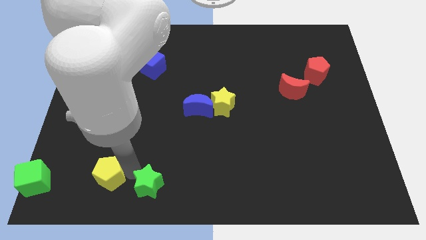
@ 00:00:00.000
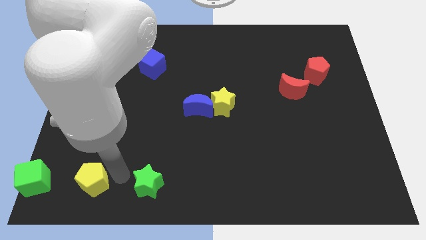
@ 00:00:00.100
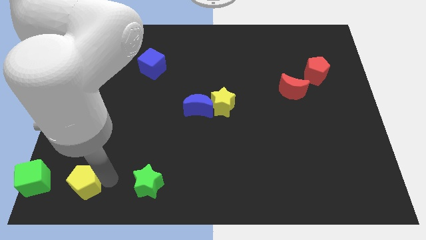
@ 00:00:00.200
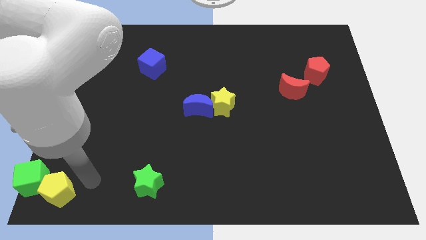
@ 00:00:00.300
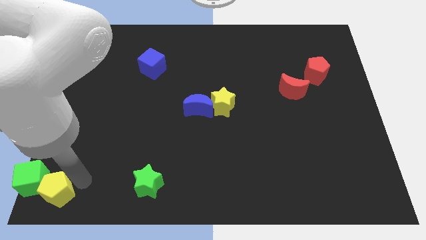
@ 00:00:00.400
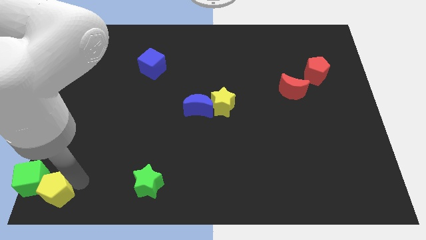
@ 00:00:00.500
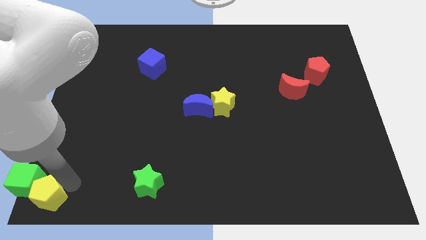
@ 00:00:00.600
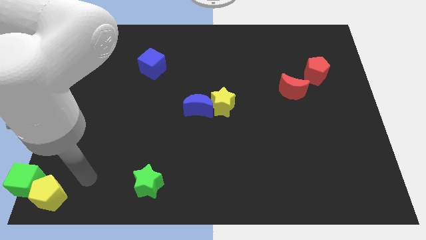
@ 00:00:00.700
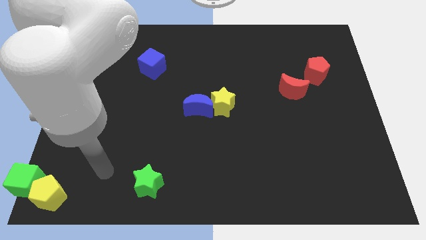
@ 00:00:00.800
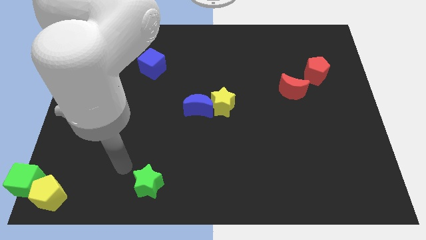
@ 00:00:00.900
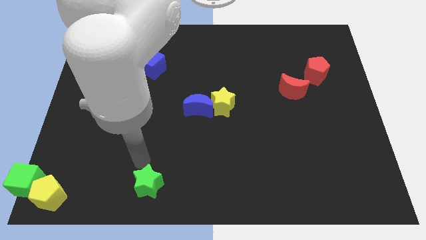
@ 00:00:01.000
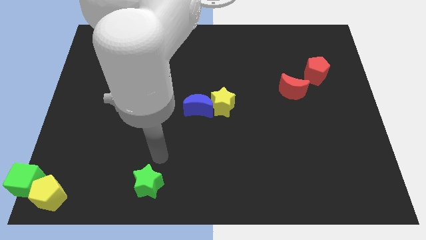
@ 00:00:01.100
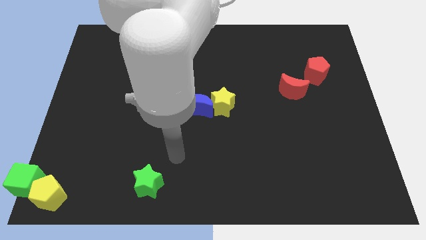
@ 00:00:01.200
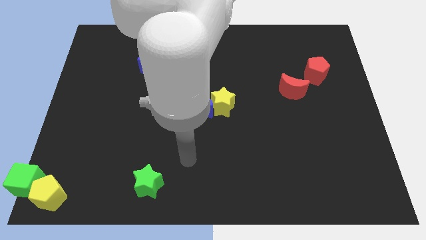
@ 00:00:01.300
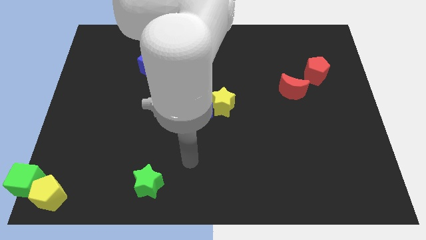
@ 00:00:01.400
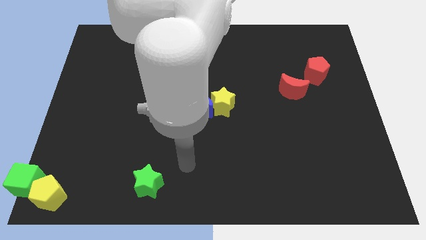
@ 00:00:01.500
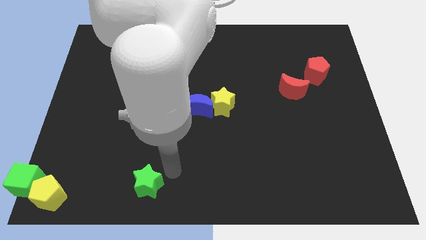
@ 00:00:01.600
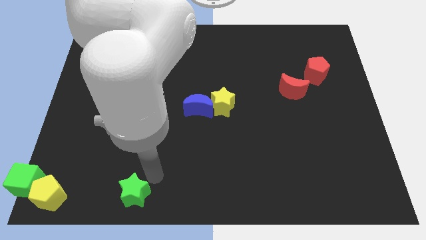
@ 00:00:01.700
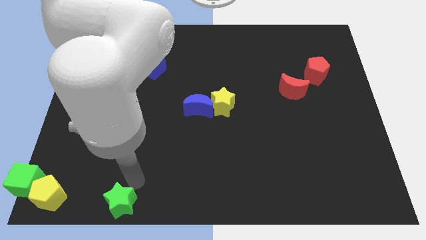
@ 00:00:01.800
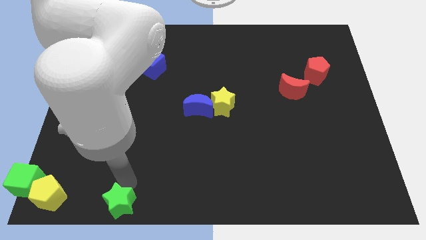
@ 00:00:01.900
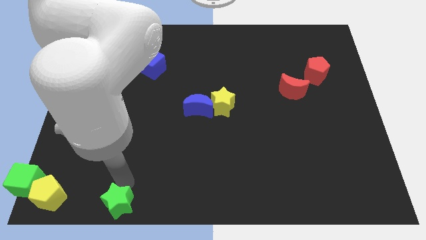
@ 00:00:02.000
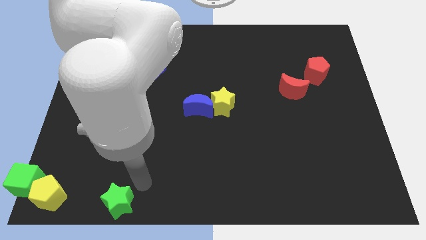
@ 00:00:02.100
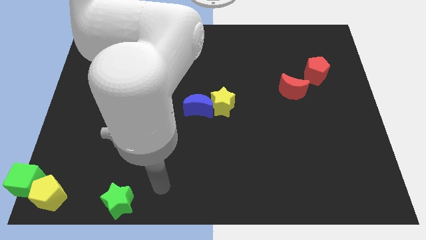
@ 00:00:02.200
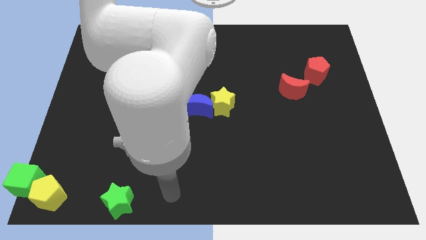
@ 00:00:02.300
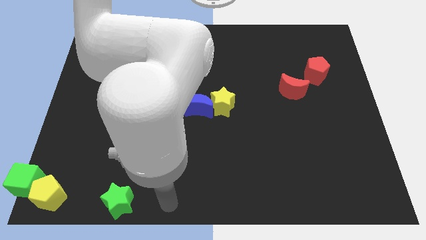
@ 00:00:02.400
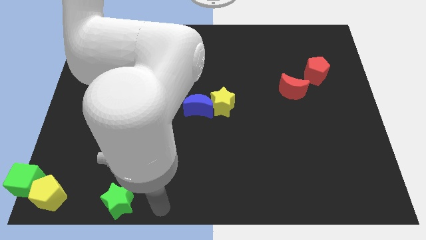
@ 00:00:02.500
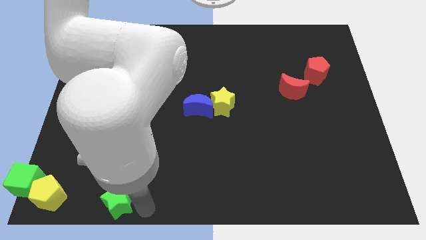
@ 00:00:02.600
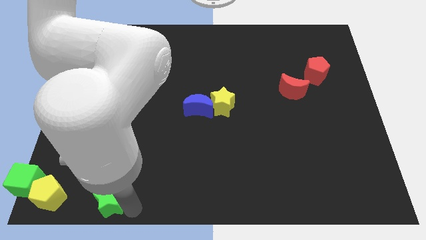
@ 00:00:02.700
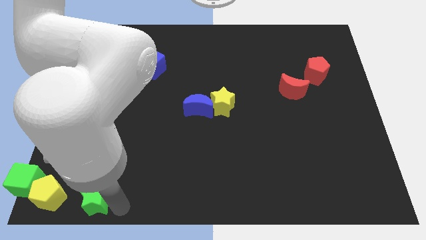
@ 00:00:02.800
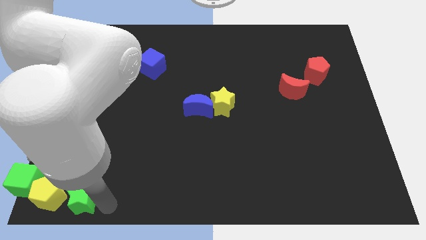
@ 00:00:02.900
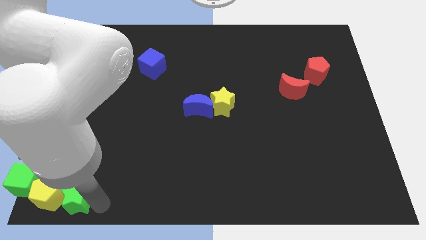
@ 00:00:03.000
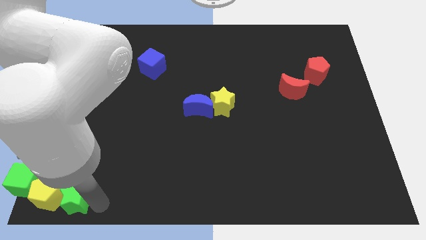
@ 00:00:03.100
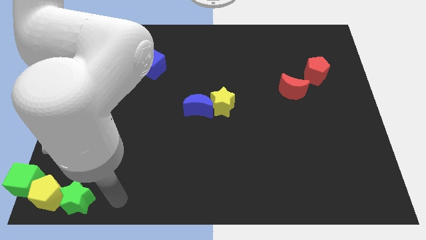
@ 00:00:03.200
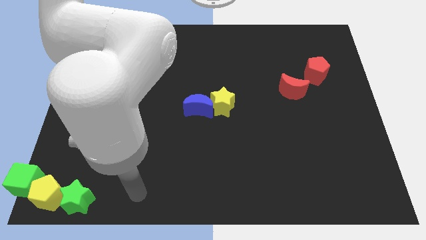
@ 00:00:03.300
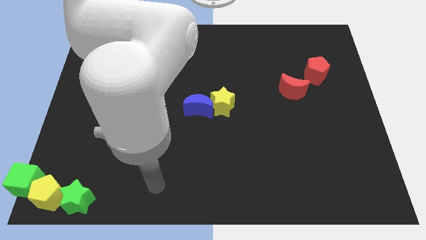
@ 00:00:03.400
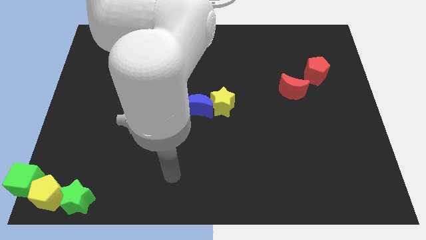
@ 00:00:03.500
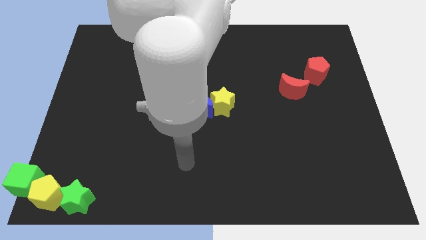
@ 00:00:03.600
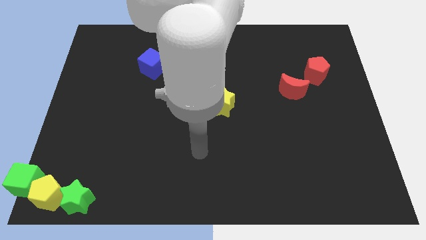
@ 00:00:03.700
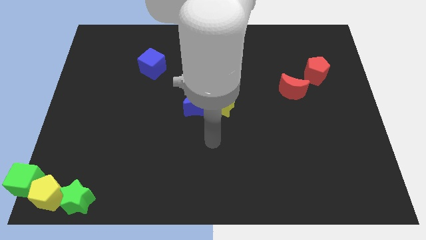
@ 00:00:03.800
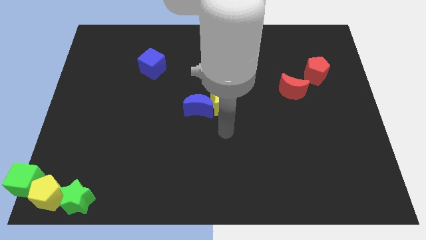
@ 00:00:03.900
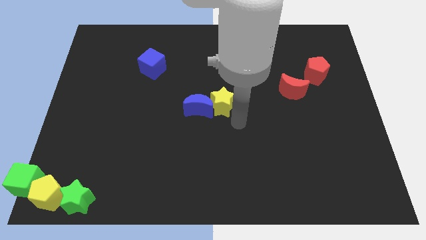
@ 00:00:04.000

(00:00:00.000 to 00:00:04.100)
place the yellow pentagon and green star on the bottom left corner of the board

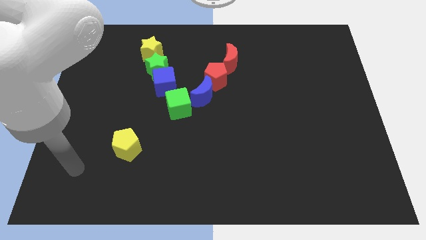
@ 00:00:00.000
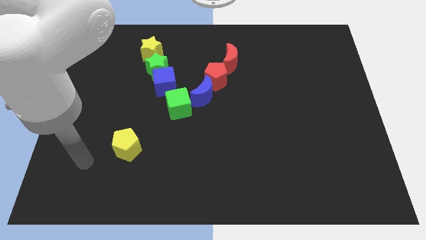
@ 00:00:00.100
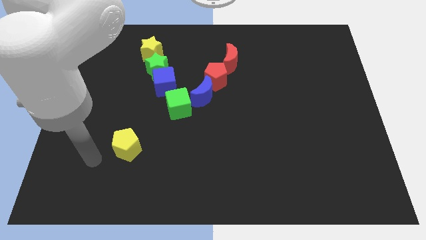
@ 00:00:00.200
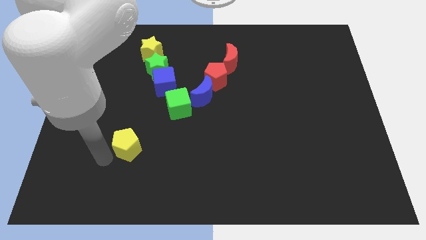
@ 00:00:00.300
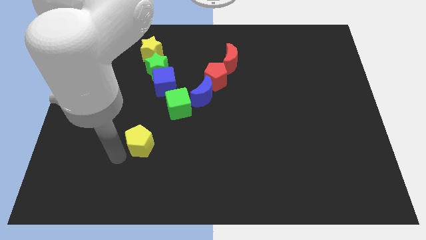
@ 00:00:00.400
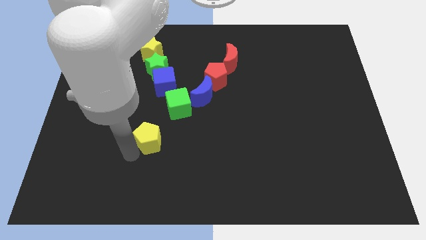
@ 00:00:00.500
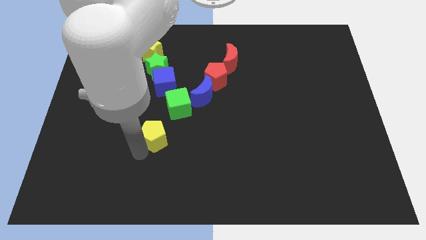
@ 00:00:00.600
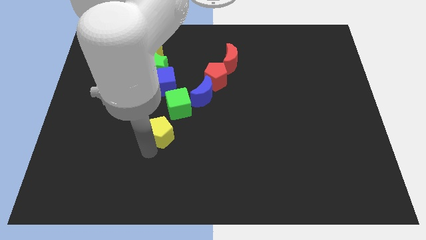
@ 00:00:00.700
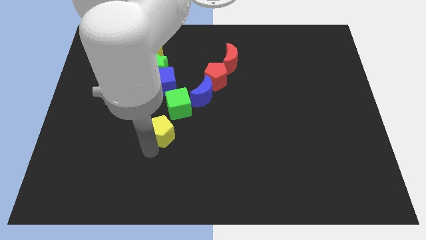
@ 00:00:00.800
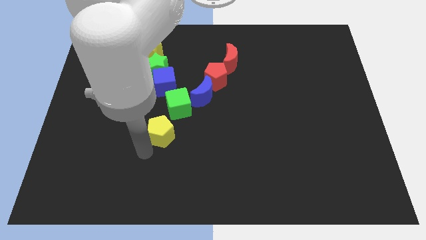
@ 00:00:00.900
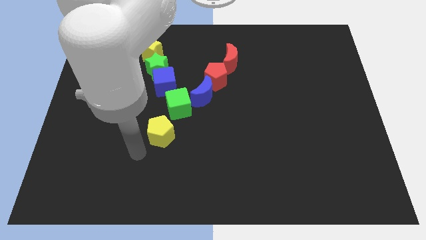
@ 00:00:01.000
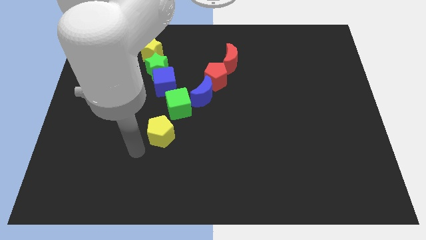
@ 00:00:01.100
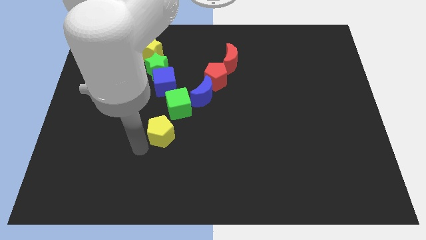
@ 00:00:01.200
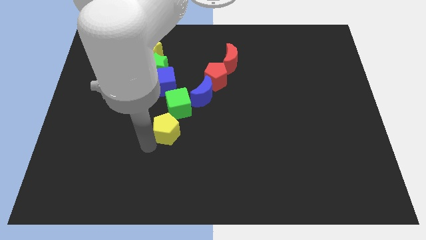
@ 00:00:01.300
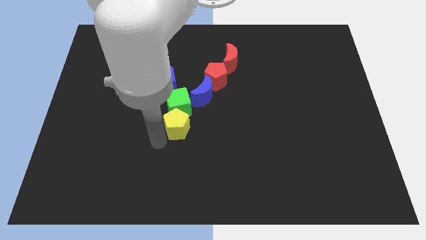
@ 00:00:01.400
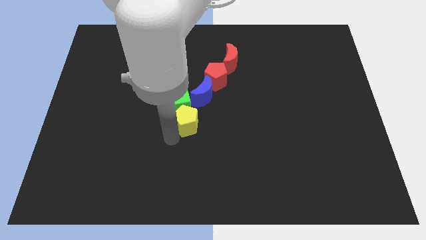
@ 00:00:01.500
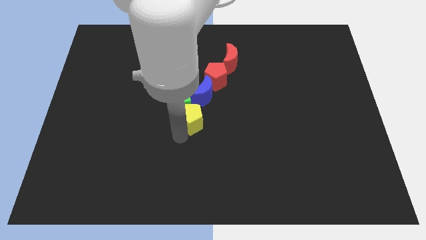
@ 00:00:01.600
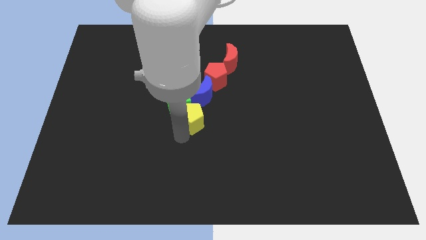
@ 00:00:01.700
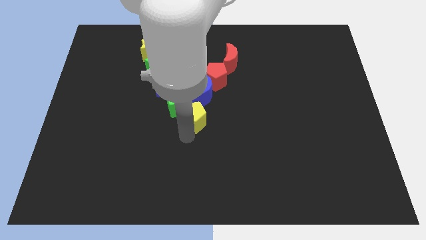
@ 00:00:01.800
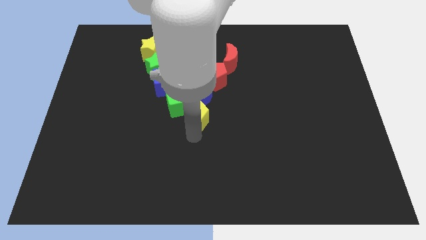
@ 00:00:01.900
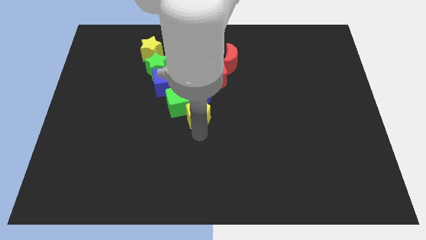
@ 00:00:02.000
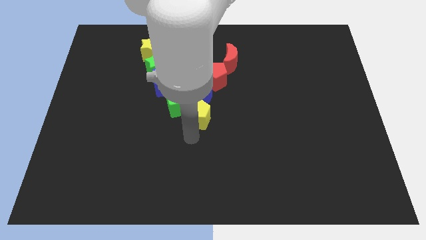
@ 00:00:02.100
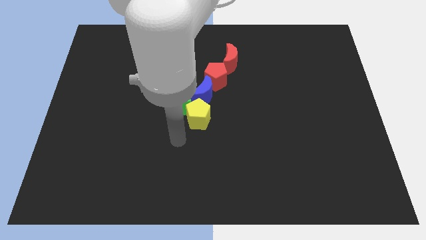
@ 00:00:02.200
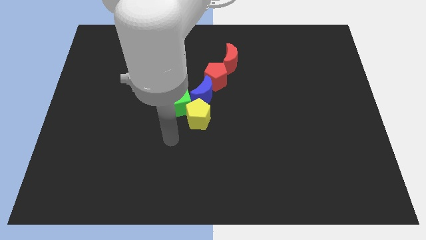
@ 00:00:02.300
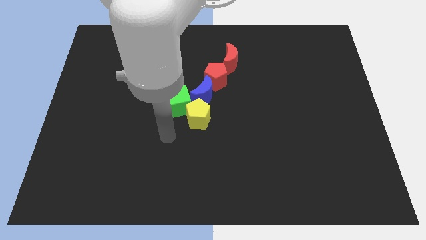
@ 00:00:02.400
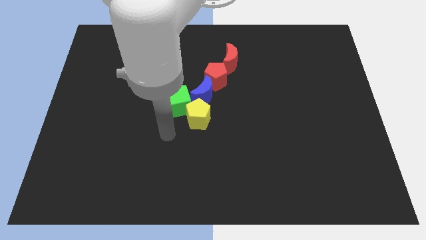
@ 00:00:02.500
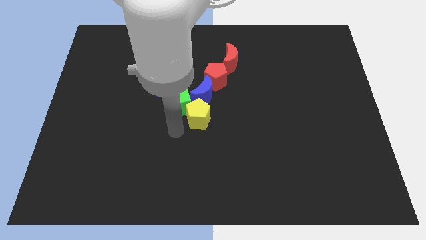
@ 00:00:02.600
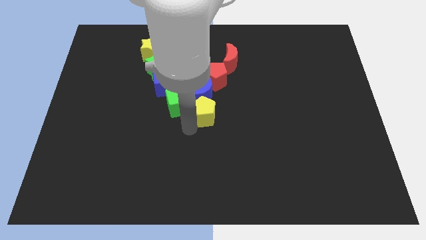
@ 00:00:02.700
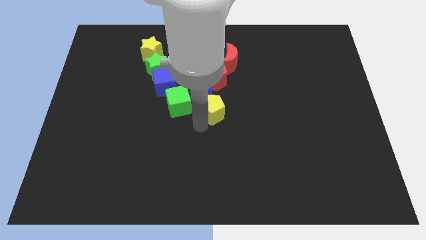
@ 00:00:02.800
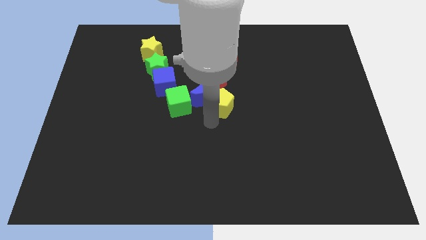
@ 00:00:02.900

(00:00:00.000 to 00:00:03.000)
push the yellow pentagon down to the blue moon

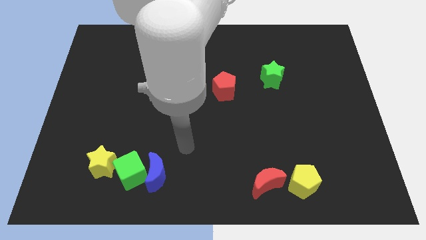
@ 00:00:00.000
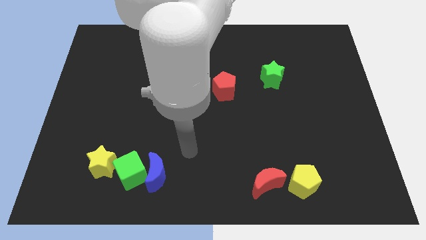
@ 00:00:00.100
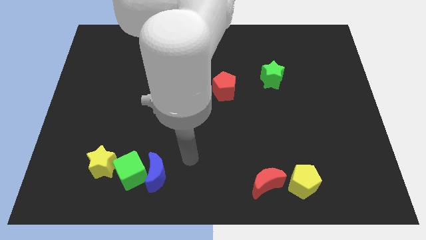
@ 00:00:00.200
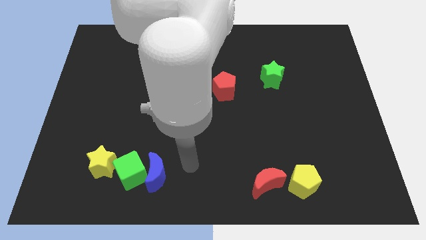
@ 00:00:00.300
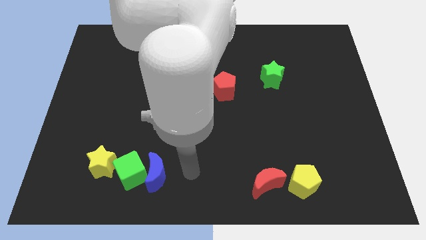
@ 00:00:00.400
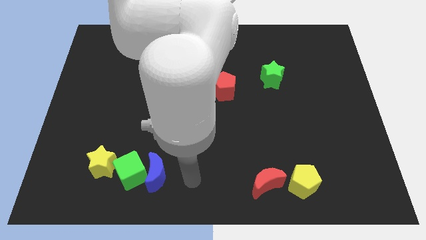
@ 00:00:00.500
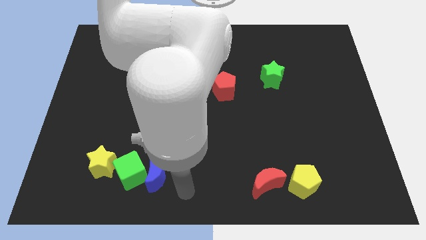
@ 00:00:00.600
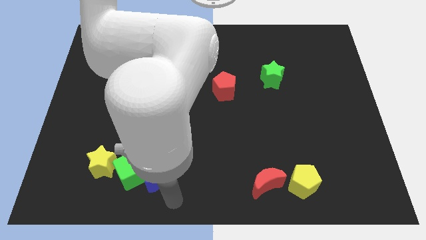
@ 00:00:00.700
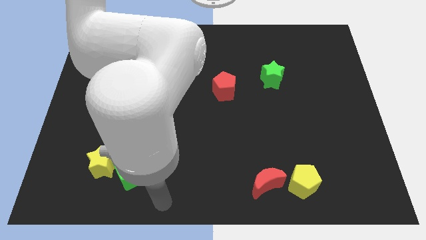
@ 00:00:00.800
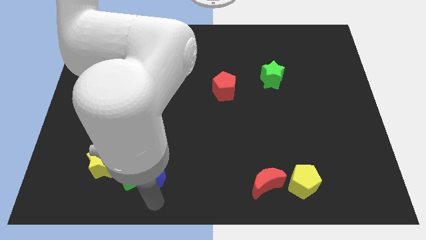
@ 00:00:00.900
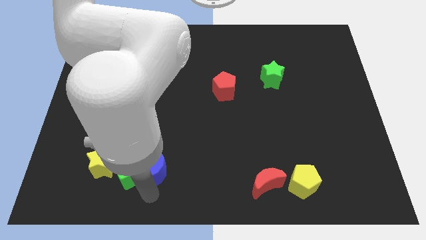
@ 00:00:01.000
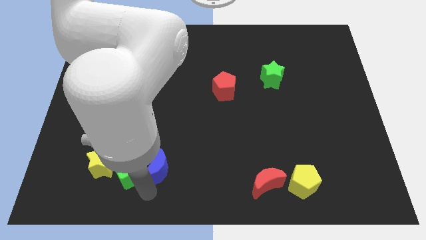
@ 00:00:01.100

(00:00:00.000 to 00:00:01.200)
move your arm towards the blue crescent

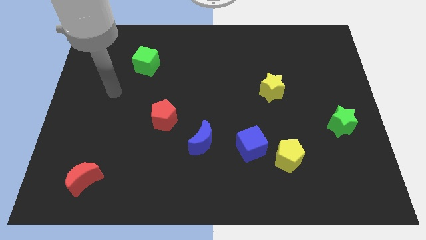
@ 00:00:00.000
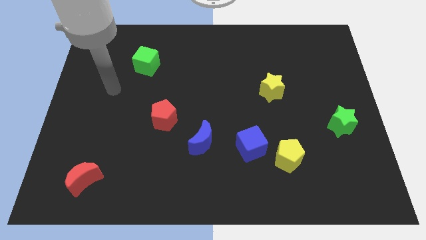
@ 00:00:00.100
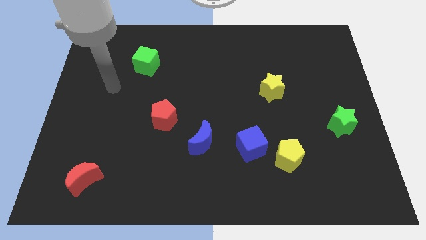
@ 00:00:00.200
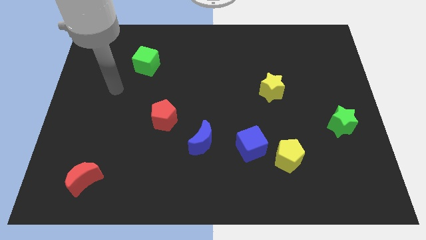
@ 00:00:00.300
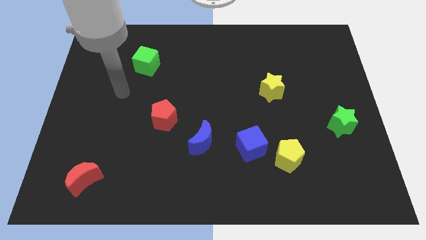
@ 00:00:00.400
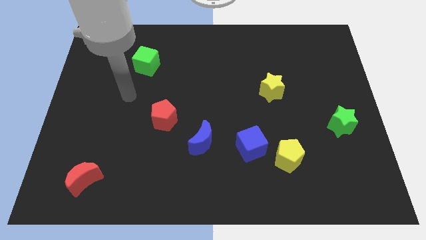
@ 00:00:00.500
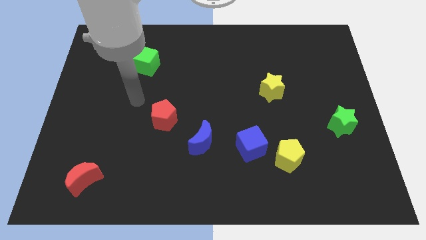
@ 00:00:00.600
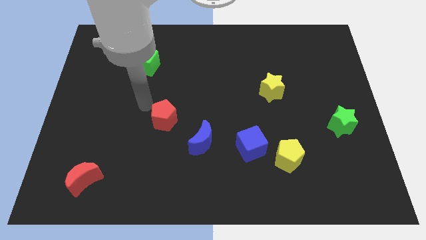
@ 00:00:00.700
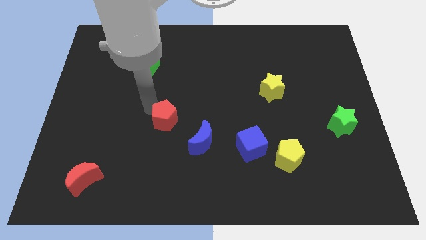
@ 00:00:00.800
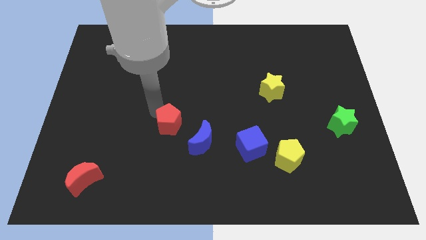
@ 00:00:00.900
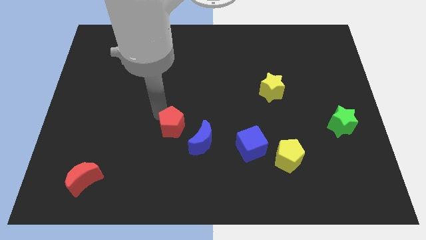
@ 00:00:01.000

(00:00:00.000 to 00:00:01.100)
tap on the top side of red pentagon
